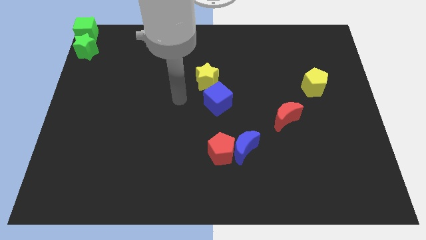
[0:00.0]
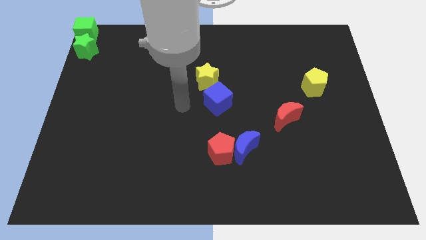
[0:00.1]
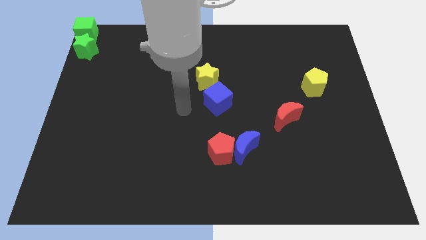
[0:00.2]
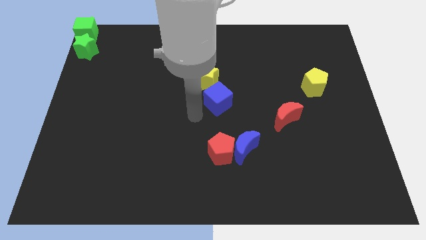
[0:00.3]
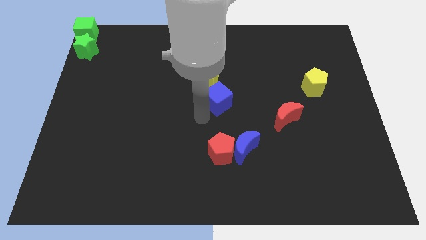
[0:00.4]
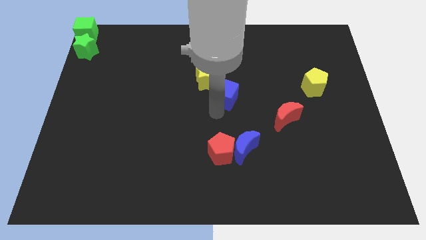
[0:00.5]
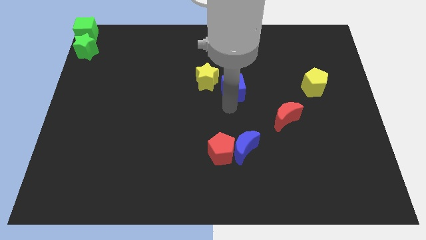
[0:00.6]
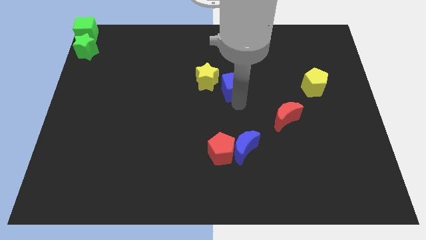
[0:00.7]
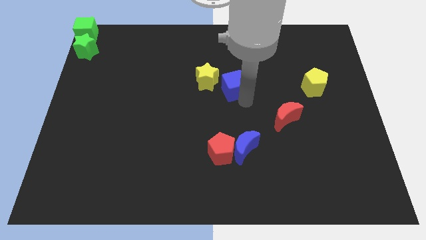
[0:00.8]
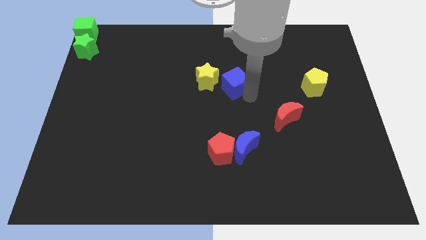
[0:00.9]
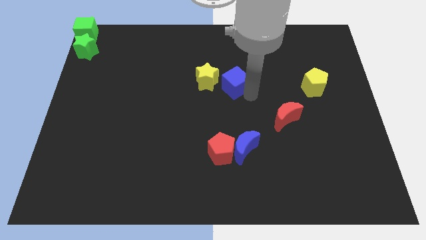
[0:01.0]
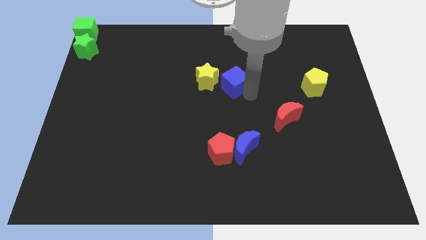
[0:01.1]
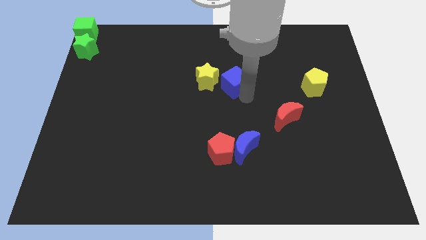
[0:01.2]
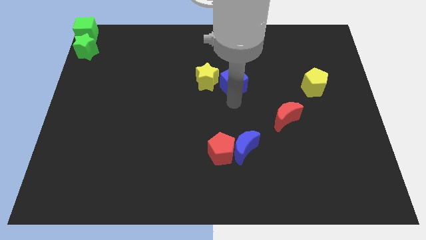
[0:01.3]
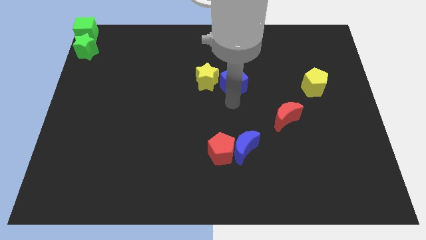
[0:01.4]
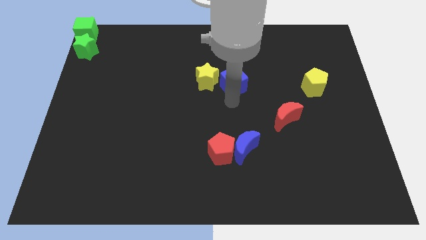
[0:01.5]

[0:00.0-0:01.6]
push the blue block to the right side of the yellow star

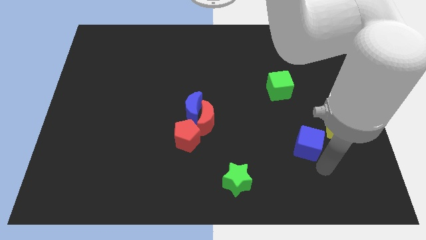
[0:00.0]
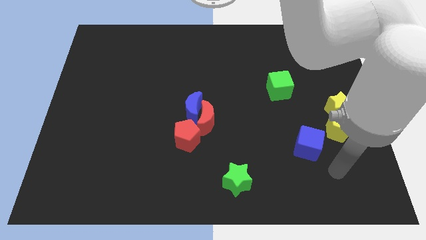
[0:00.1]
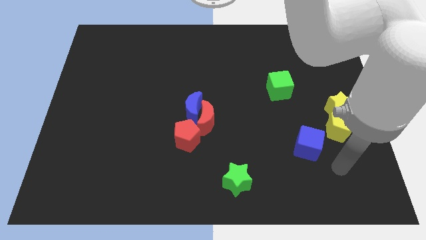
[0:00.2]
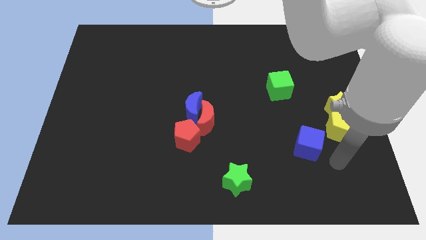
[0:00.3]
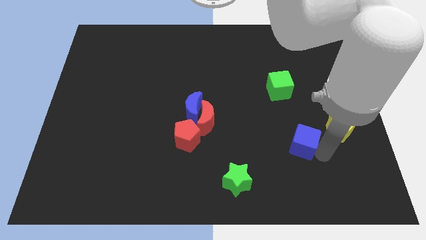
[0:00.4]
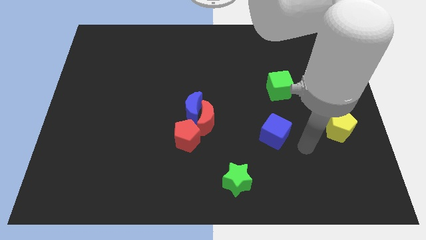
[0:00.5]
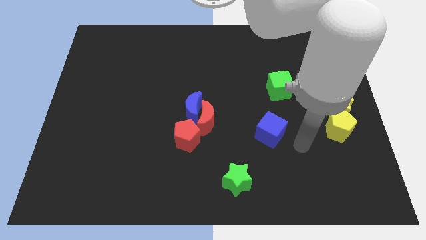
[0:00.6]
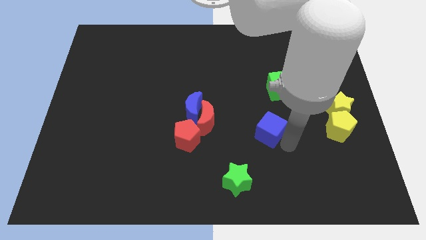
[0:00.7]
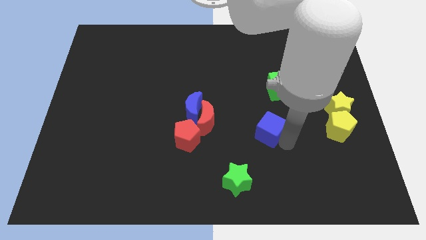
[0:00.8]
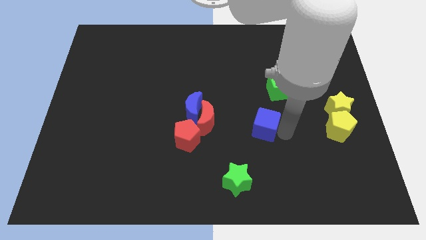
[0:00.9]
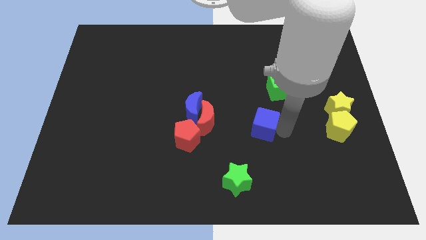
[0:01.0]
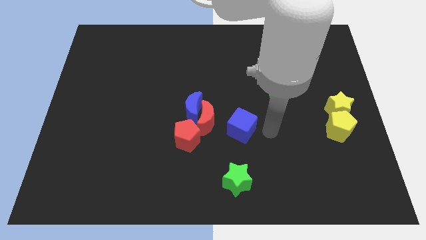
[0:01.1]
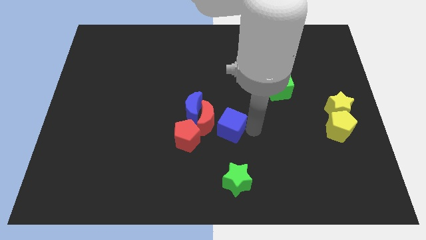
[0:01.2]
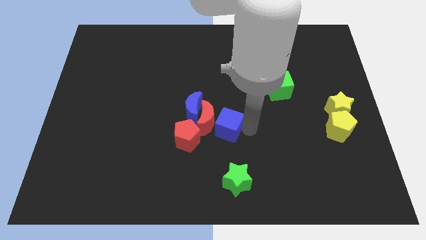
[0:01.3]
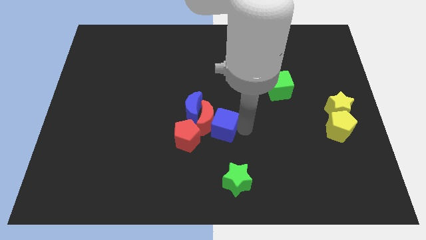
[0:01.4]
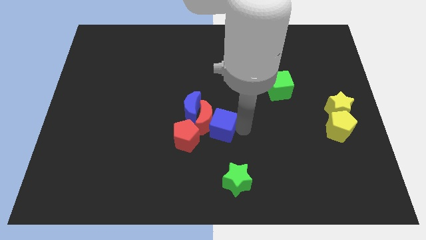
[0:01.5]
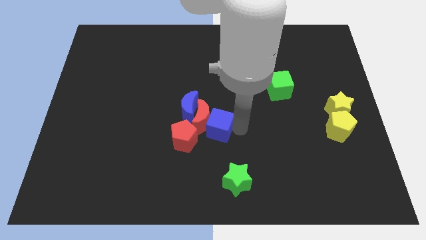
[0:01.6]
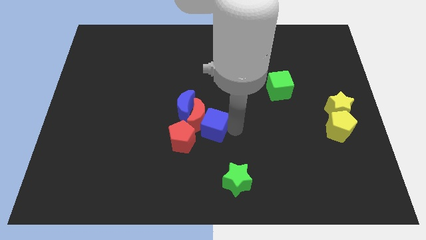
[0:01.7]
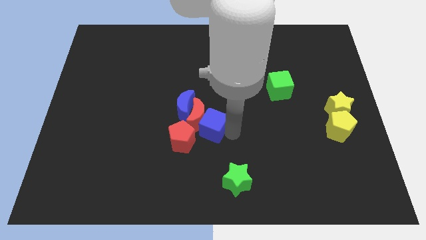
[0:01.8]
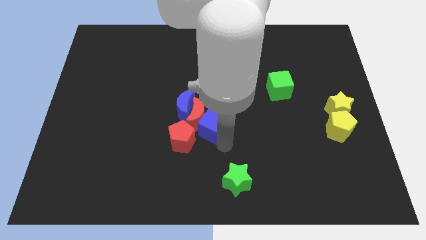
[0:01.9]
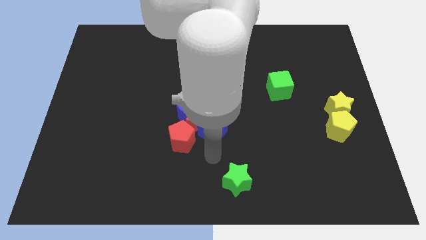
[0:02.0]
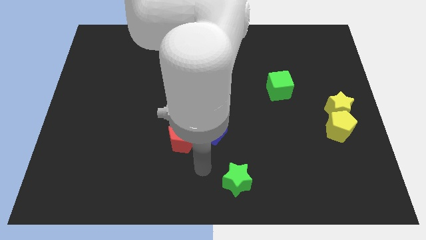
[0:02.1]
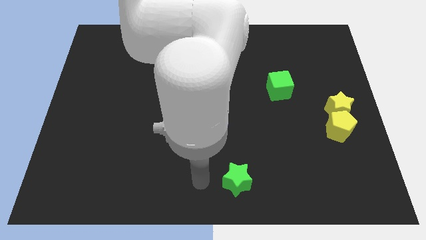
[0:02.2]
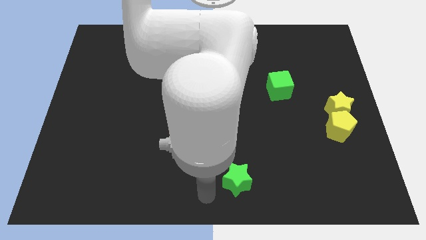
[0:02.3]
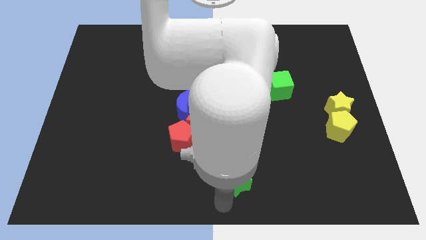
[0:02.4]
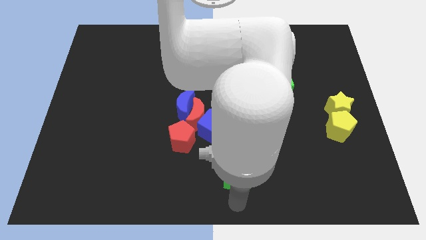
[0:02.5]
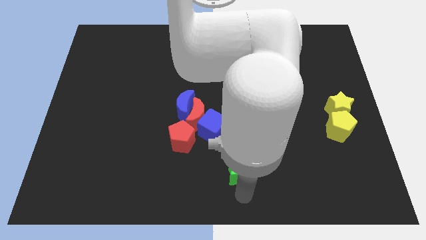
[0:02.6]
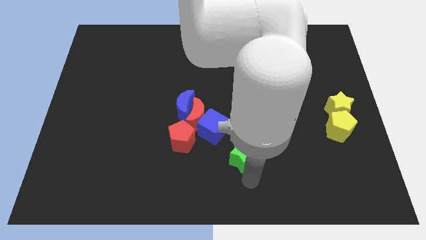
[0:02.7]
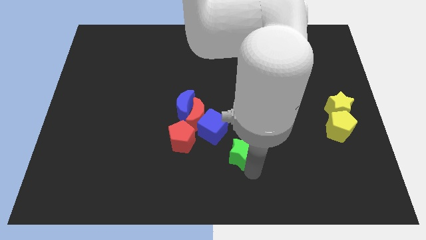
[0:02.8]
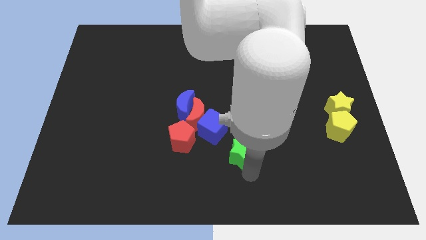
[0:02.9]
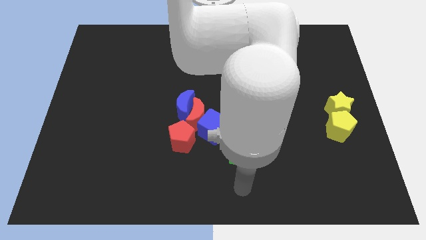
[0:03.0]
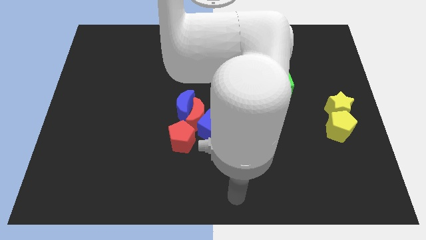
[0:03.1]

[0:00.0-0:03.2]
push the blue cube into the red crescent

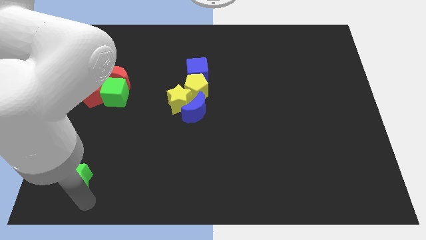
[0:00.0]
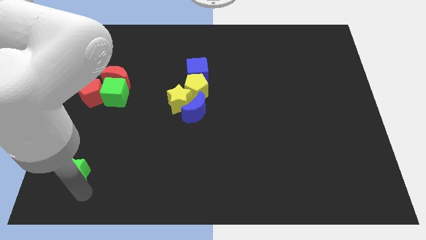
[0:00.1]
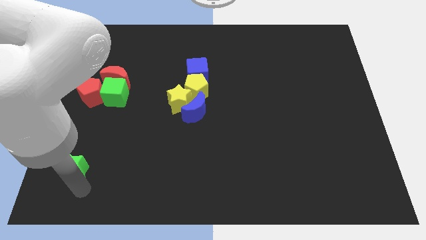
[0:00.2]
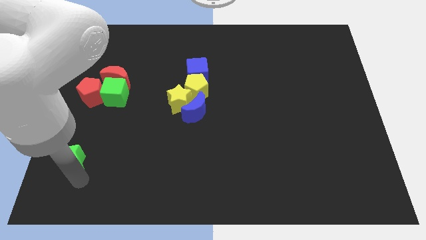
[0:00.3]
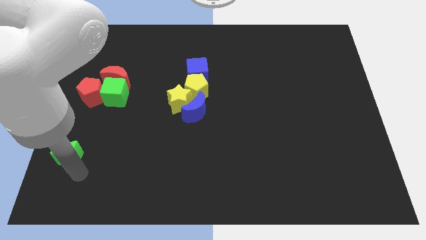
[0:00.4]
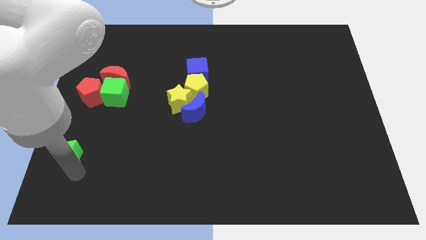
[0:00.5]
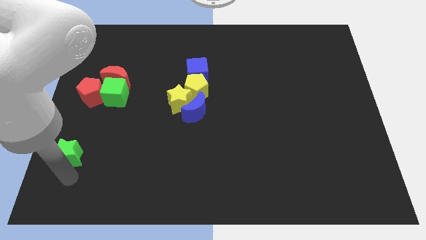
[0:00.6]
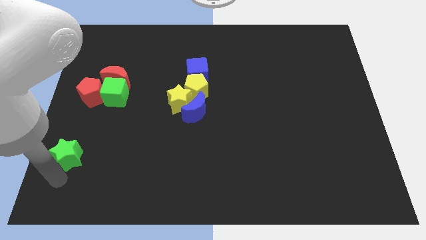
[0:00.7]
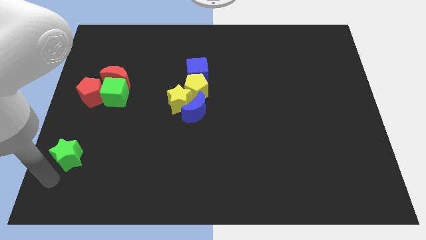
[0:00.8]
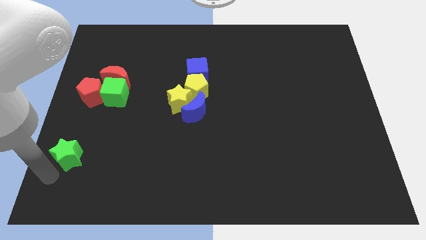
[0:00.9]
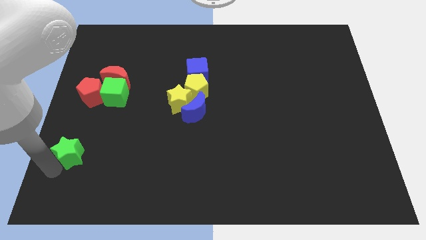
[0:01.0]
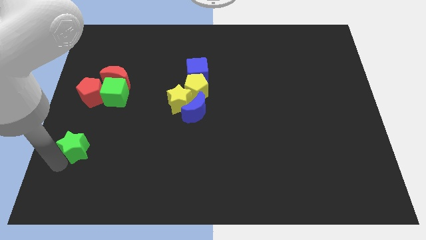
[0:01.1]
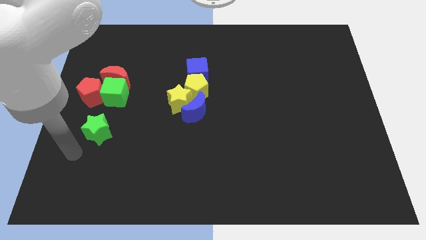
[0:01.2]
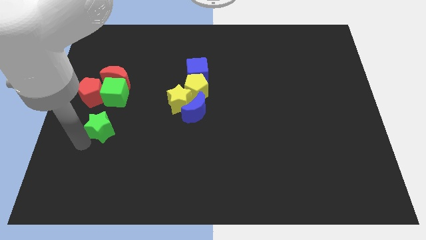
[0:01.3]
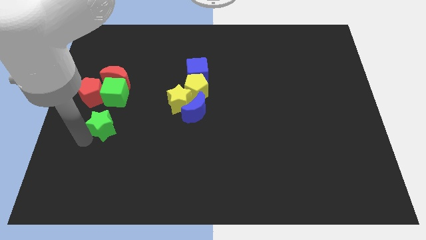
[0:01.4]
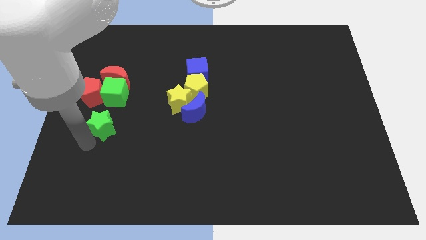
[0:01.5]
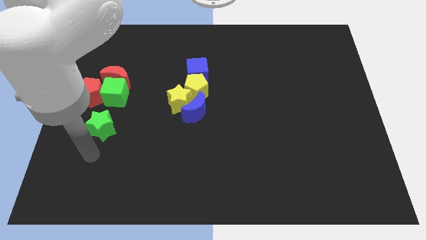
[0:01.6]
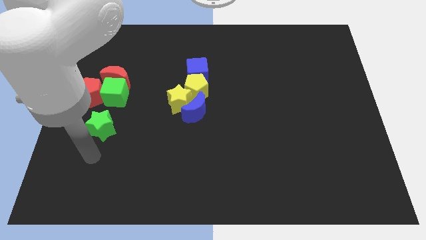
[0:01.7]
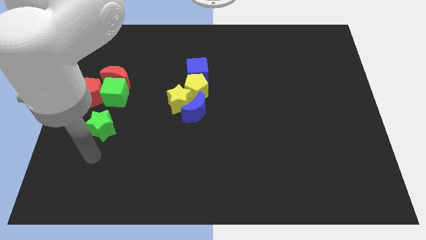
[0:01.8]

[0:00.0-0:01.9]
move the green star slightly up

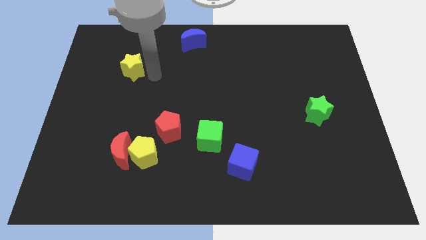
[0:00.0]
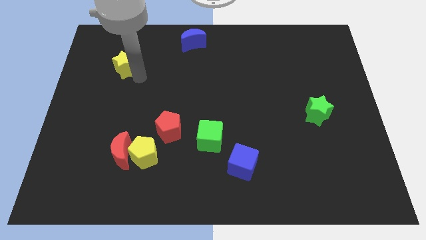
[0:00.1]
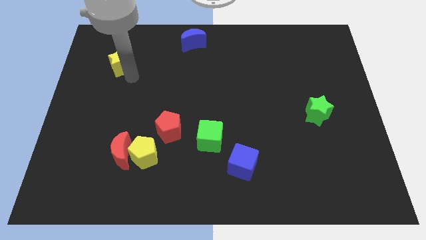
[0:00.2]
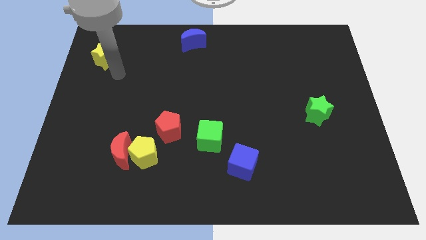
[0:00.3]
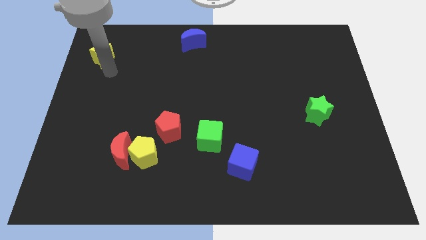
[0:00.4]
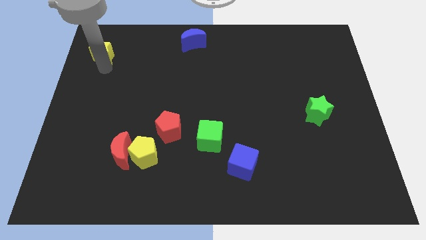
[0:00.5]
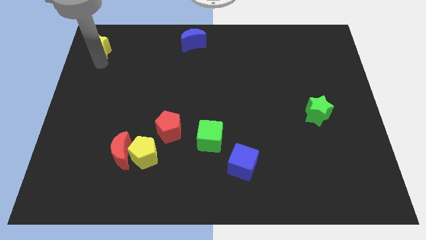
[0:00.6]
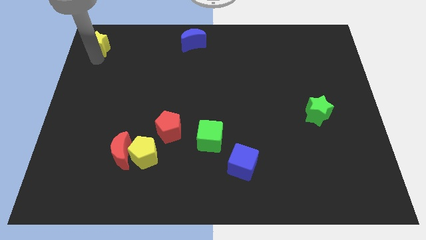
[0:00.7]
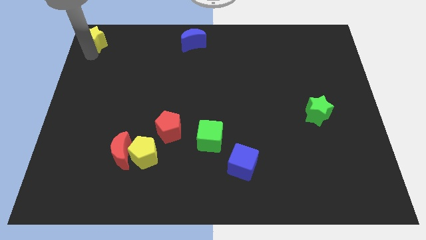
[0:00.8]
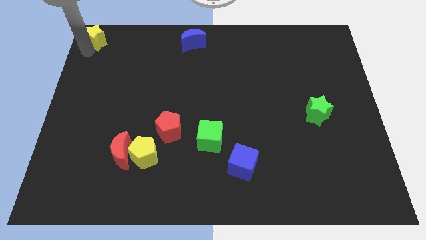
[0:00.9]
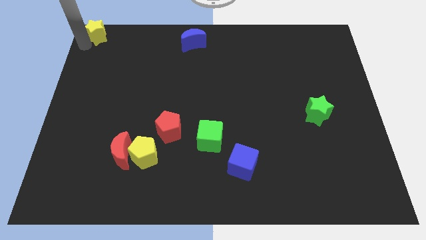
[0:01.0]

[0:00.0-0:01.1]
place yellow star to the top left corner

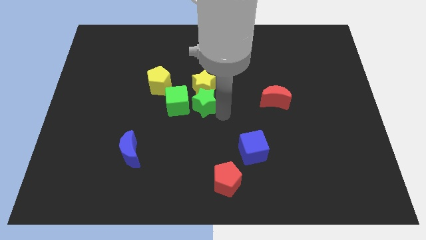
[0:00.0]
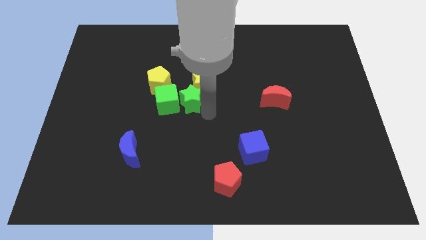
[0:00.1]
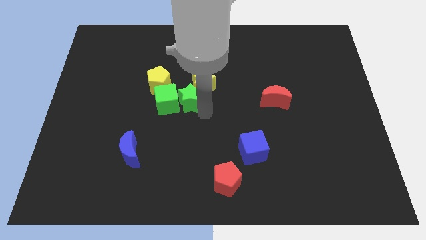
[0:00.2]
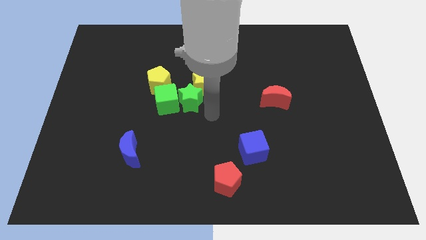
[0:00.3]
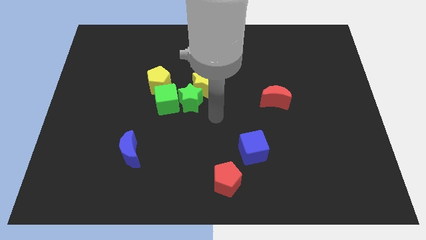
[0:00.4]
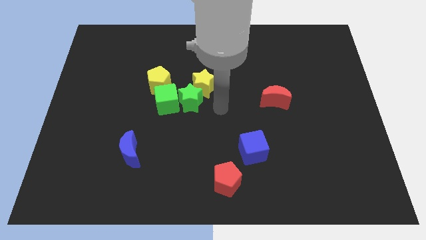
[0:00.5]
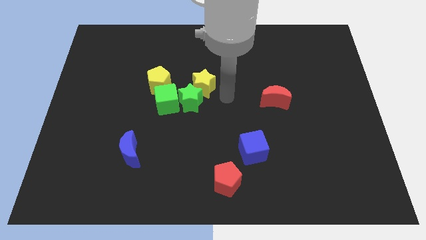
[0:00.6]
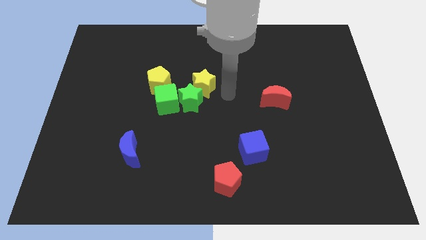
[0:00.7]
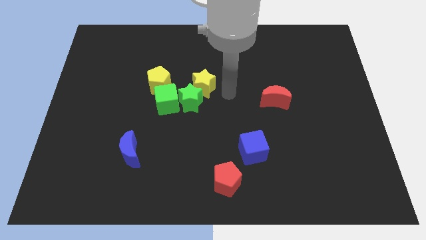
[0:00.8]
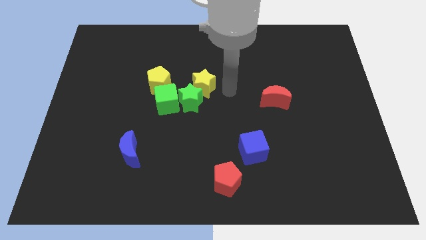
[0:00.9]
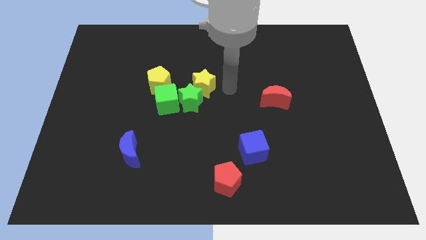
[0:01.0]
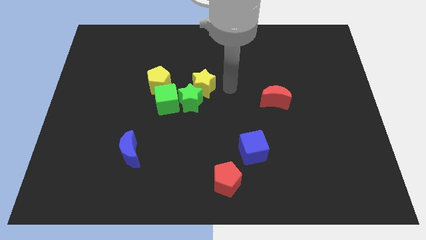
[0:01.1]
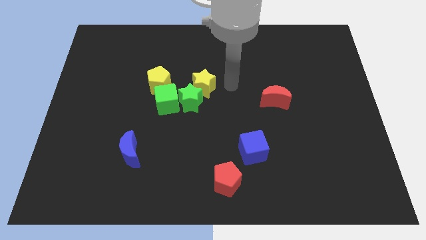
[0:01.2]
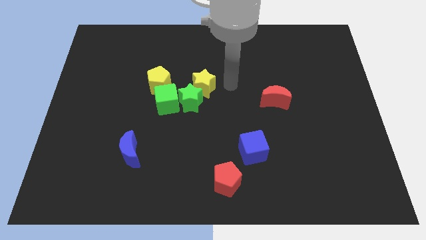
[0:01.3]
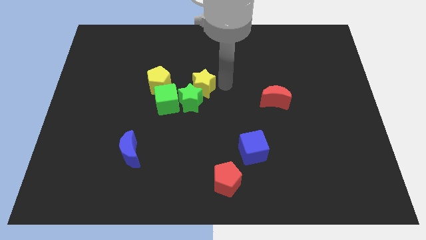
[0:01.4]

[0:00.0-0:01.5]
move green star towards group of elements at the center of the board
